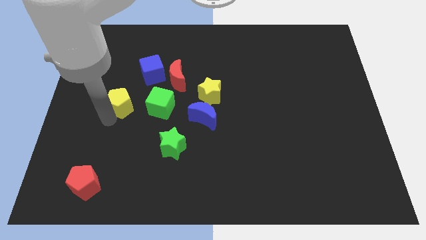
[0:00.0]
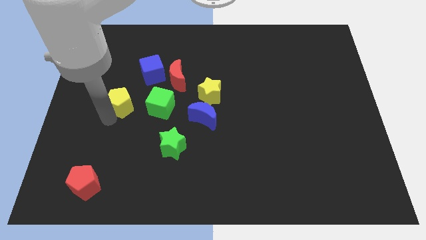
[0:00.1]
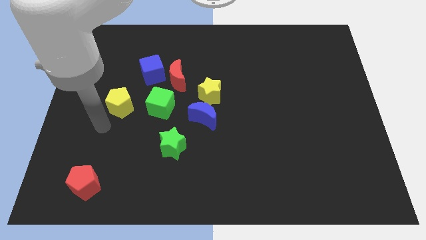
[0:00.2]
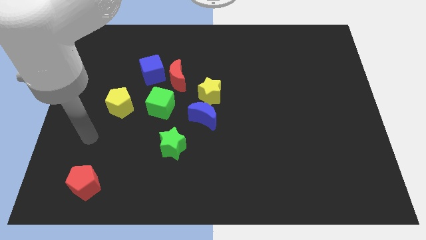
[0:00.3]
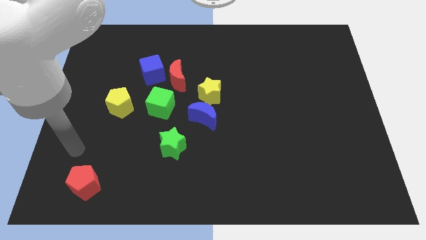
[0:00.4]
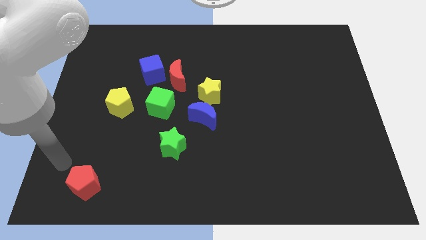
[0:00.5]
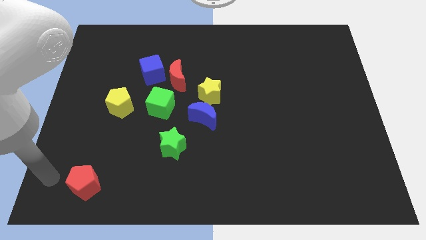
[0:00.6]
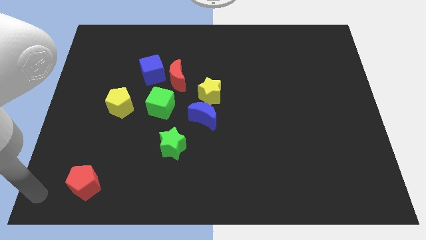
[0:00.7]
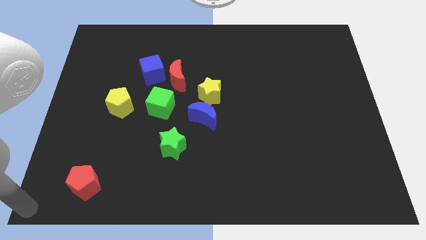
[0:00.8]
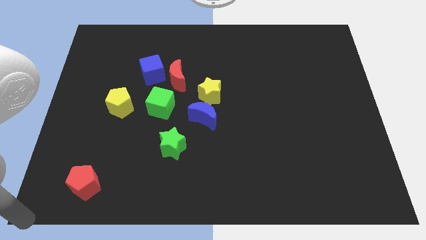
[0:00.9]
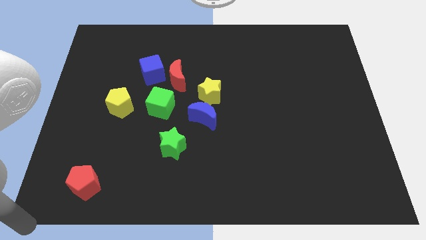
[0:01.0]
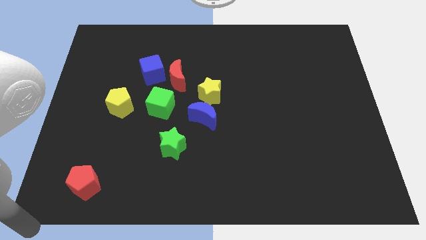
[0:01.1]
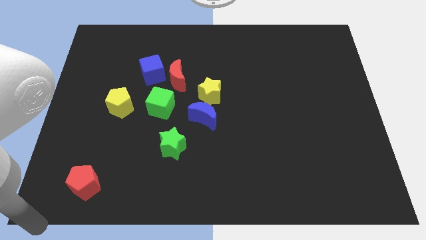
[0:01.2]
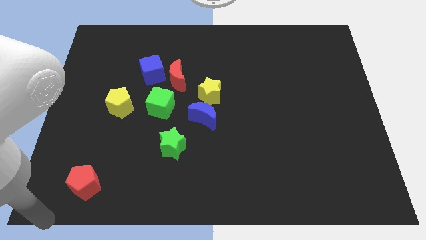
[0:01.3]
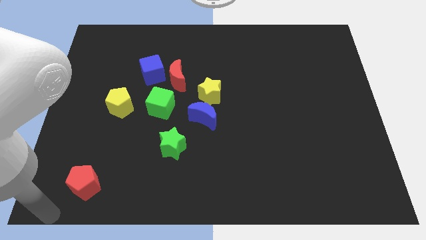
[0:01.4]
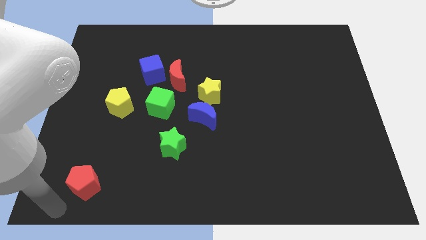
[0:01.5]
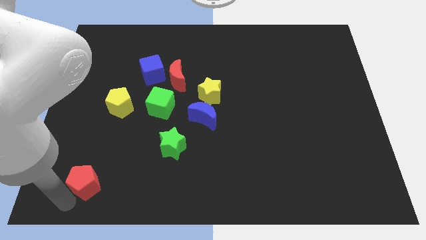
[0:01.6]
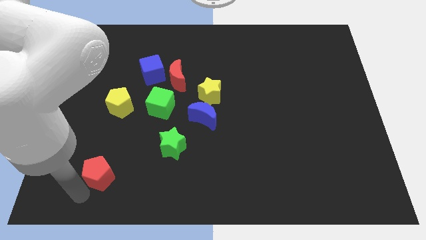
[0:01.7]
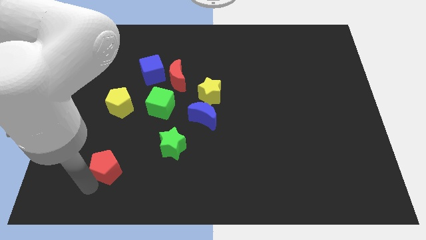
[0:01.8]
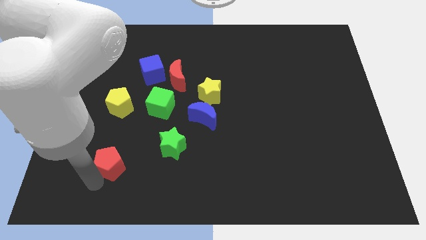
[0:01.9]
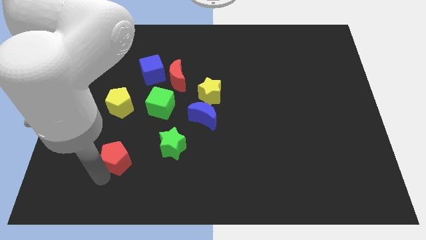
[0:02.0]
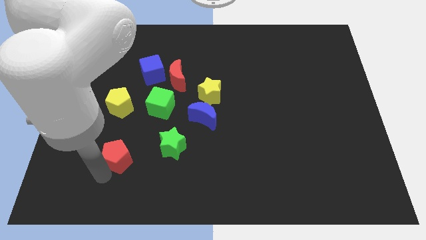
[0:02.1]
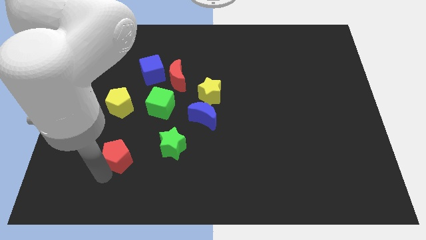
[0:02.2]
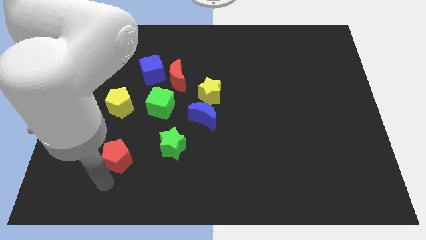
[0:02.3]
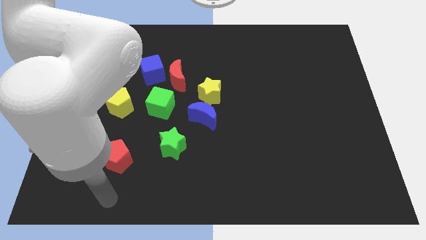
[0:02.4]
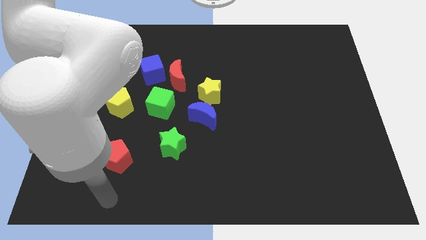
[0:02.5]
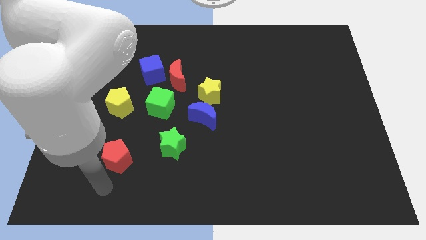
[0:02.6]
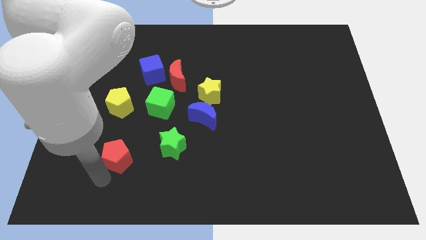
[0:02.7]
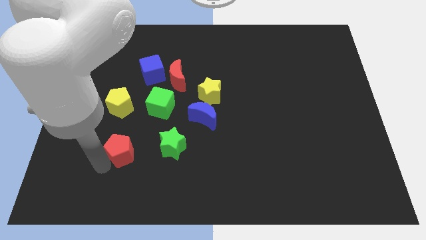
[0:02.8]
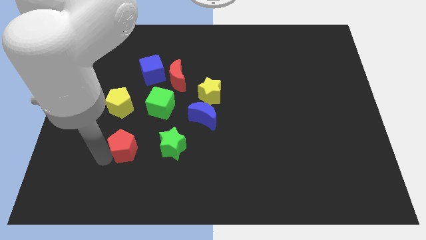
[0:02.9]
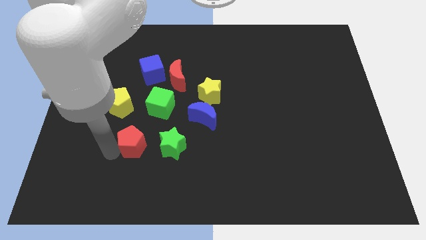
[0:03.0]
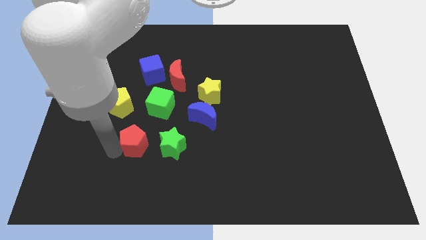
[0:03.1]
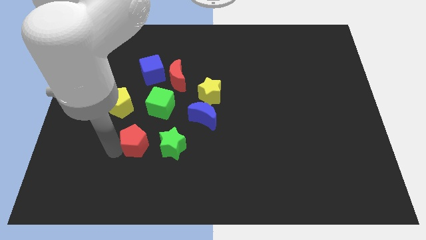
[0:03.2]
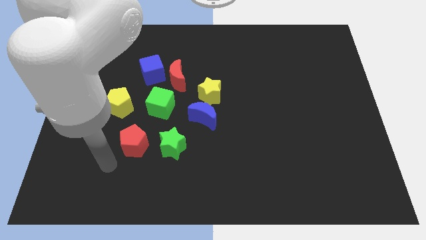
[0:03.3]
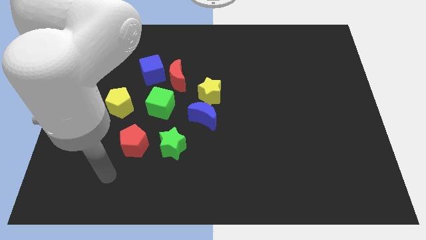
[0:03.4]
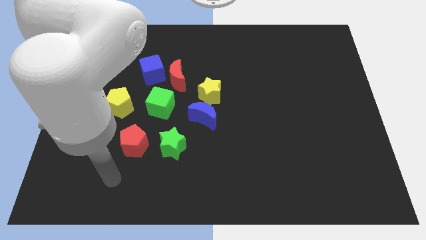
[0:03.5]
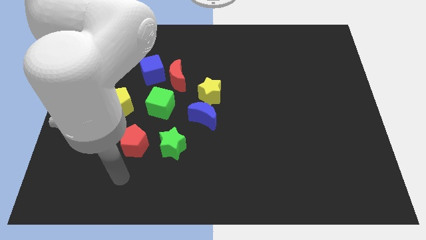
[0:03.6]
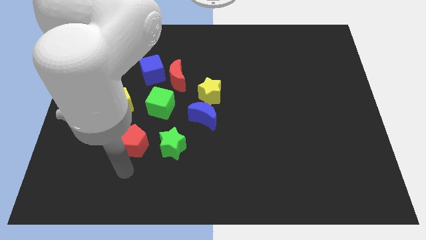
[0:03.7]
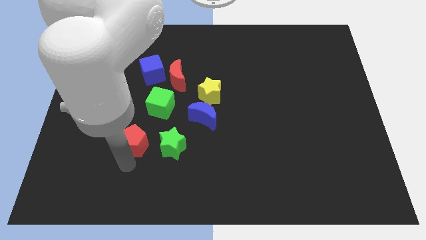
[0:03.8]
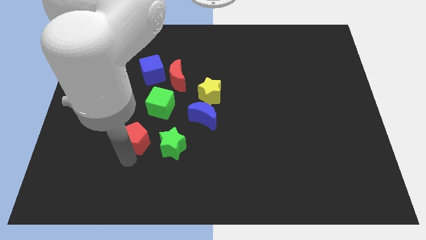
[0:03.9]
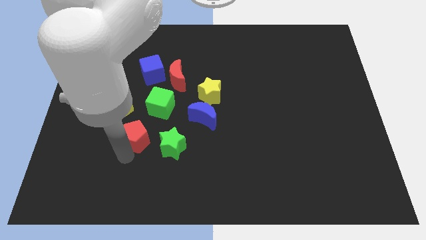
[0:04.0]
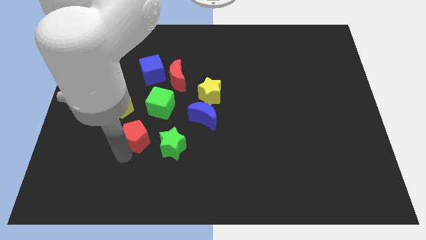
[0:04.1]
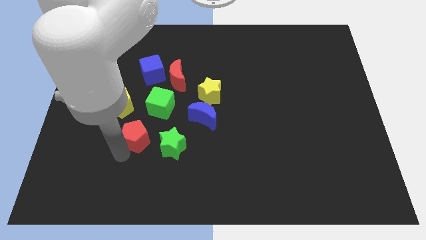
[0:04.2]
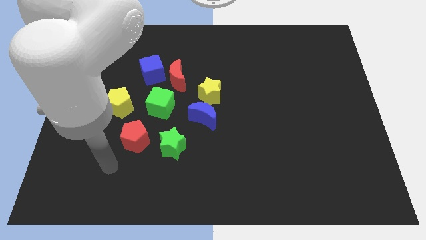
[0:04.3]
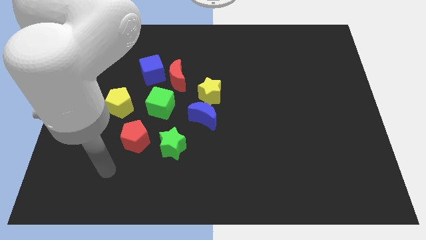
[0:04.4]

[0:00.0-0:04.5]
push red pentagon left to green star

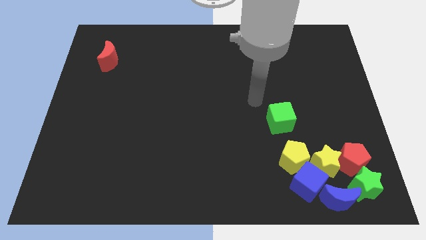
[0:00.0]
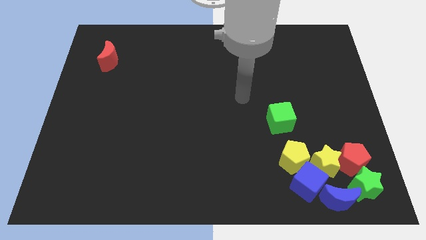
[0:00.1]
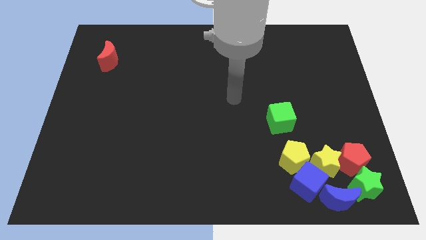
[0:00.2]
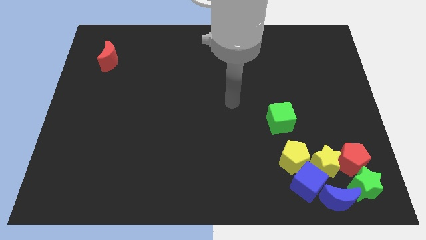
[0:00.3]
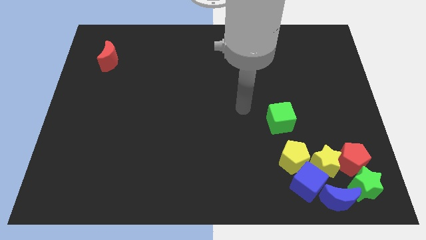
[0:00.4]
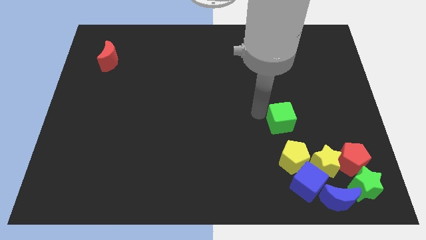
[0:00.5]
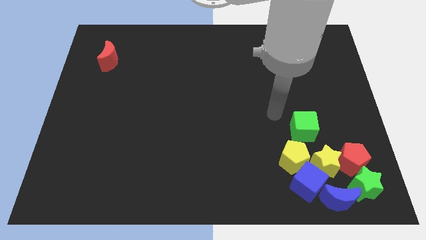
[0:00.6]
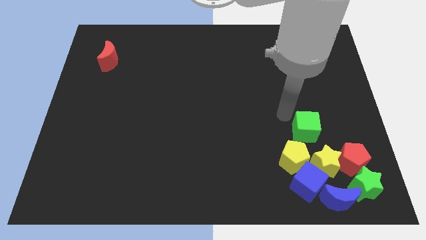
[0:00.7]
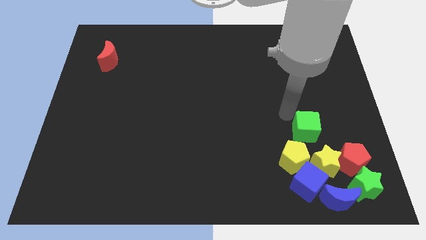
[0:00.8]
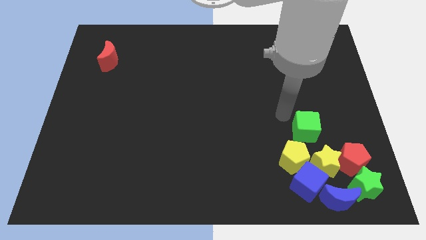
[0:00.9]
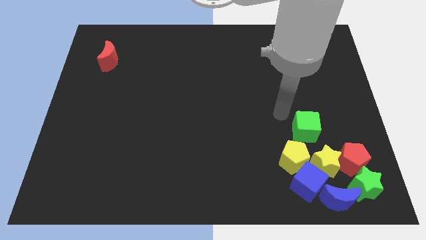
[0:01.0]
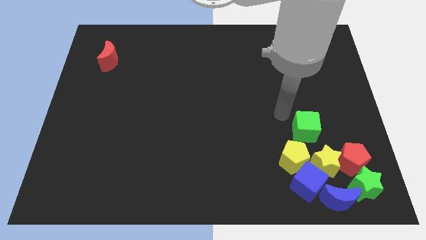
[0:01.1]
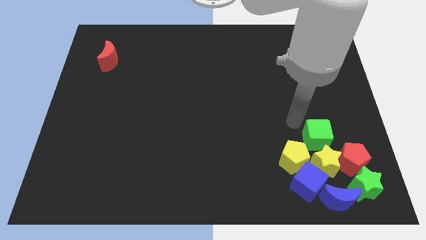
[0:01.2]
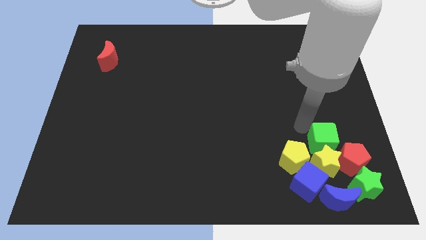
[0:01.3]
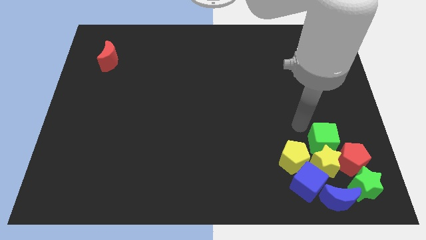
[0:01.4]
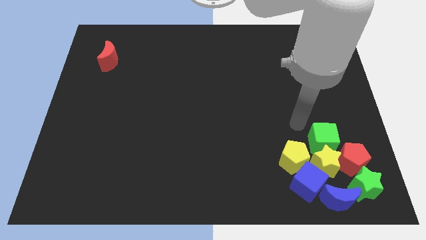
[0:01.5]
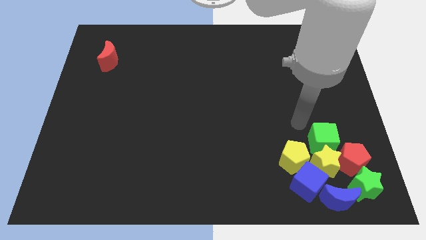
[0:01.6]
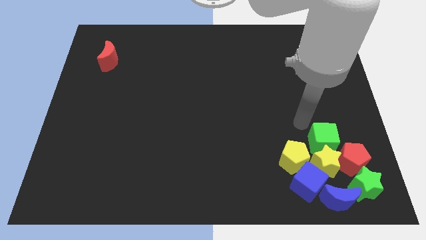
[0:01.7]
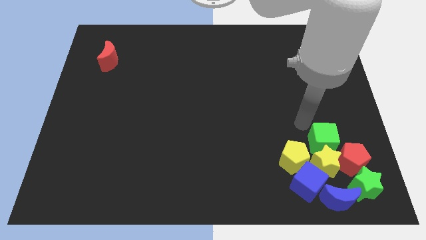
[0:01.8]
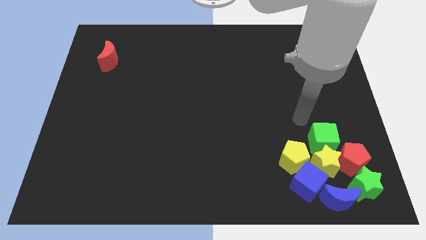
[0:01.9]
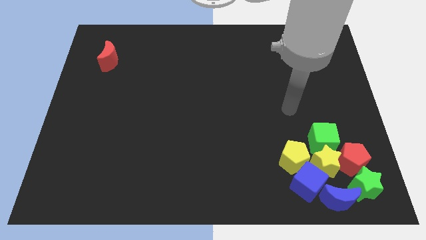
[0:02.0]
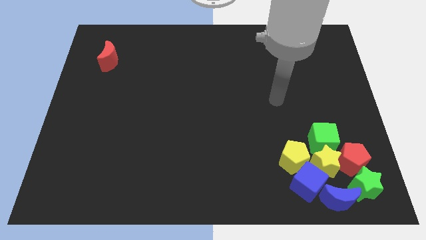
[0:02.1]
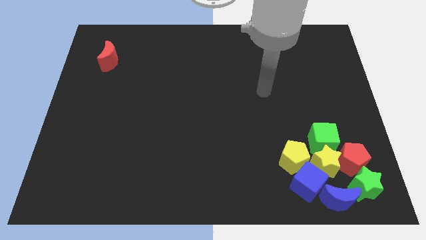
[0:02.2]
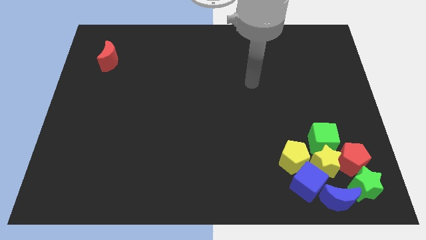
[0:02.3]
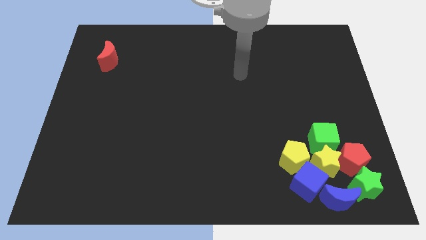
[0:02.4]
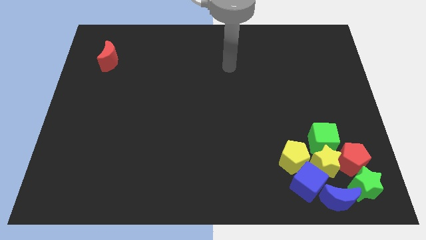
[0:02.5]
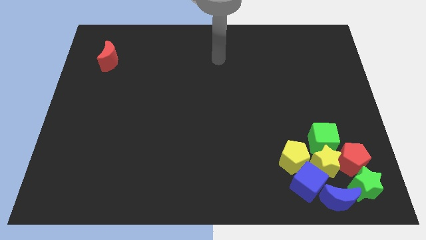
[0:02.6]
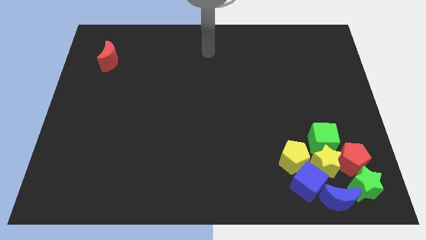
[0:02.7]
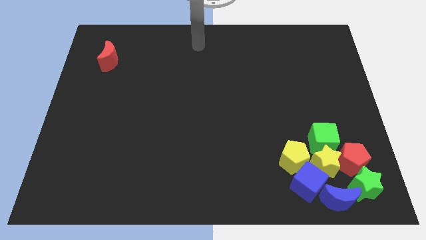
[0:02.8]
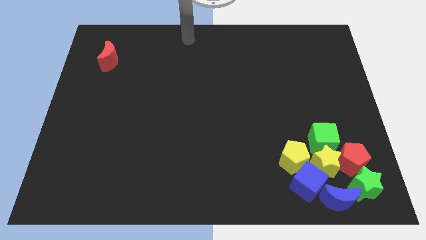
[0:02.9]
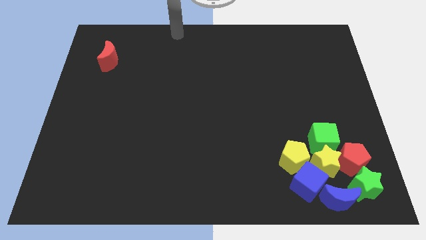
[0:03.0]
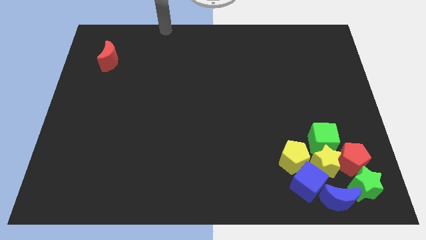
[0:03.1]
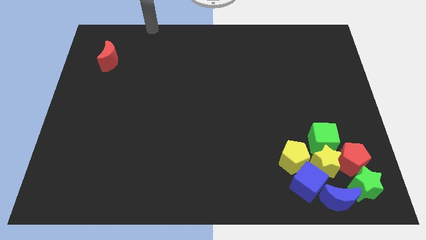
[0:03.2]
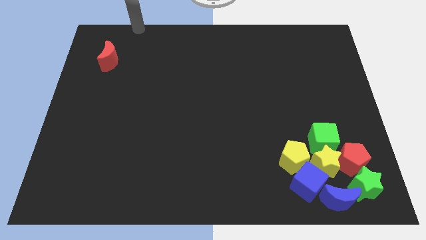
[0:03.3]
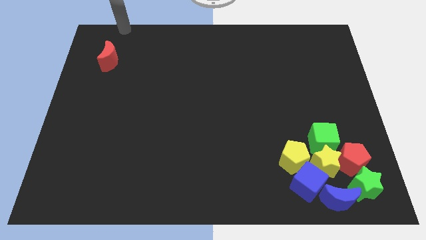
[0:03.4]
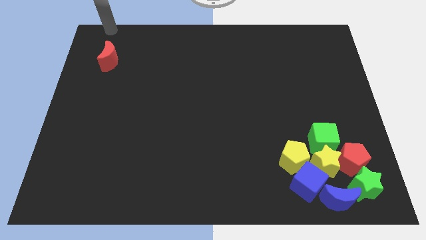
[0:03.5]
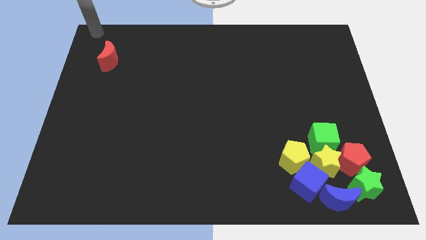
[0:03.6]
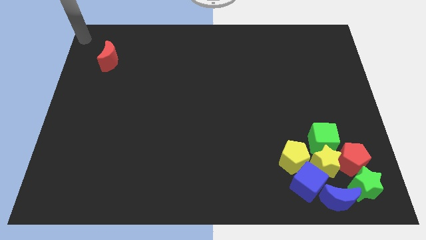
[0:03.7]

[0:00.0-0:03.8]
place green cube above yellow star

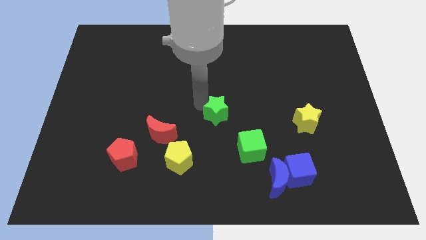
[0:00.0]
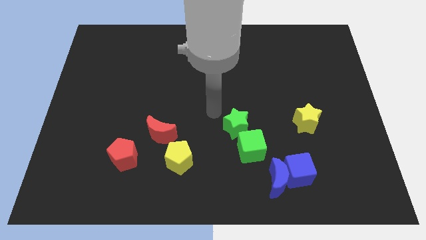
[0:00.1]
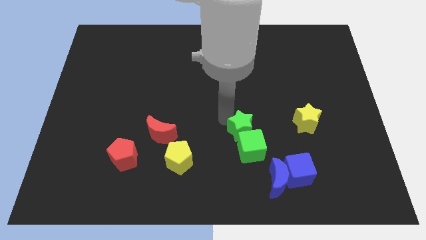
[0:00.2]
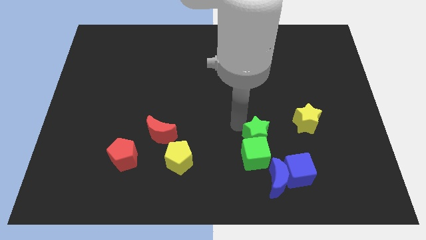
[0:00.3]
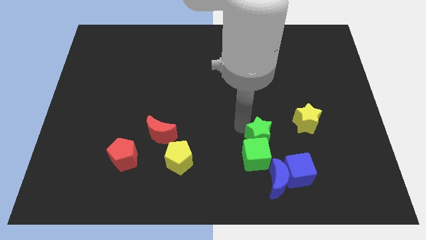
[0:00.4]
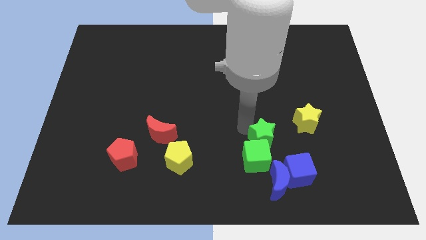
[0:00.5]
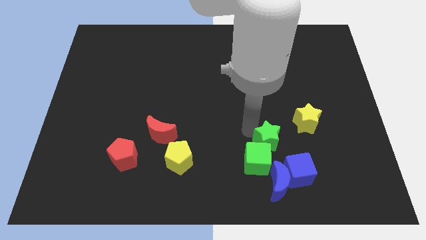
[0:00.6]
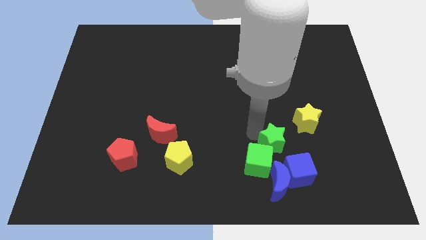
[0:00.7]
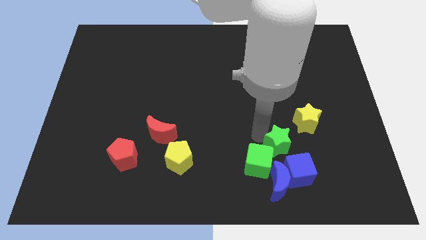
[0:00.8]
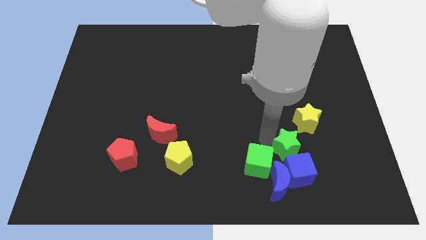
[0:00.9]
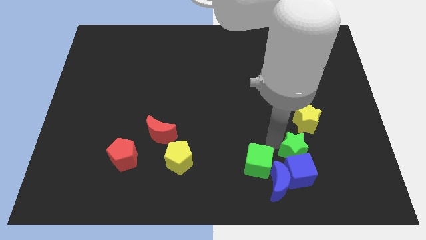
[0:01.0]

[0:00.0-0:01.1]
move the green star to the top of the blue cube
